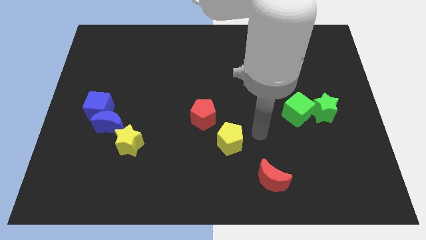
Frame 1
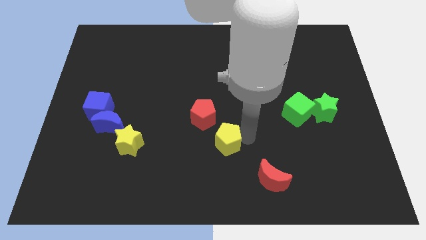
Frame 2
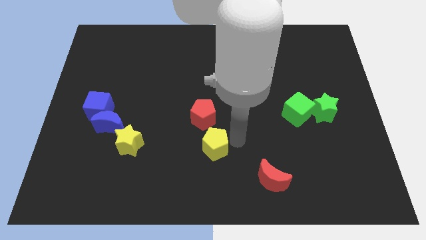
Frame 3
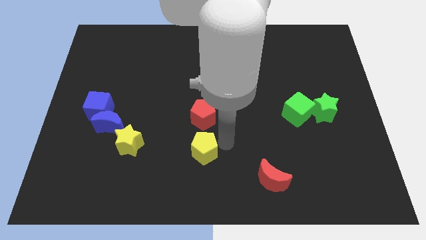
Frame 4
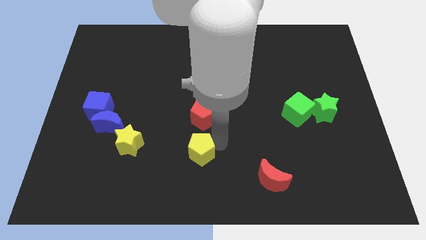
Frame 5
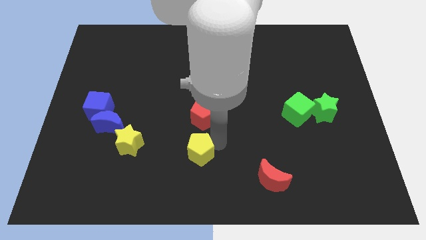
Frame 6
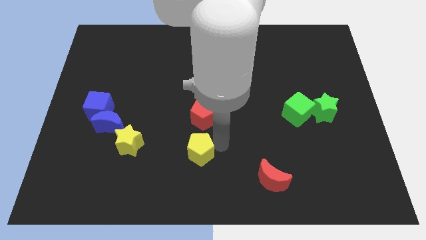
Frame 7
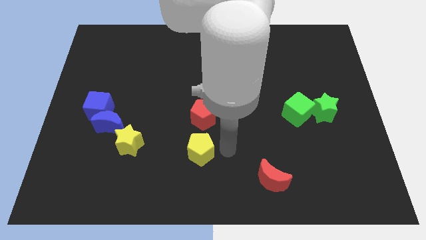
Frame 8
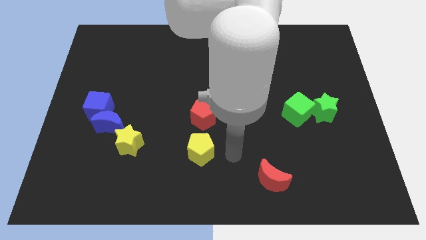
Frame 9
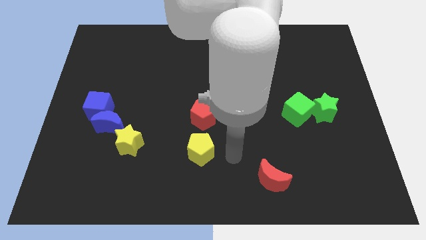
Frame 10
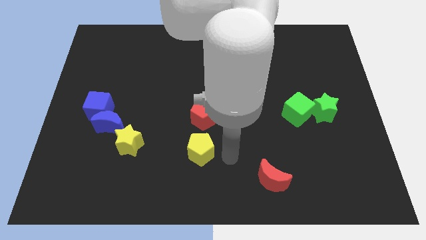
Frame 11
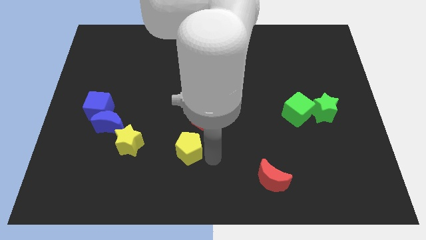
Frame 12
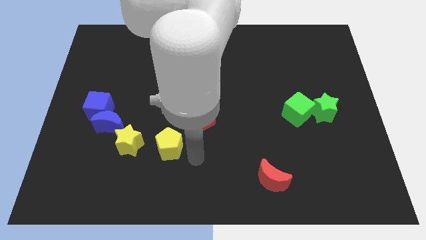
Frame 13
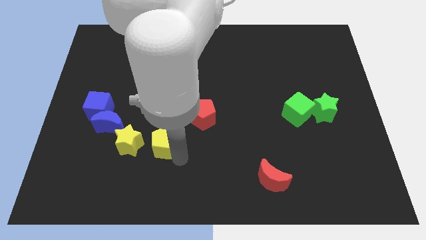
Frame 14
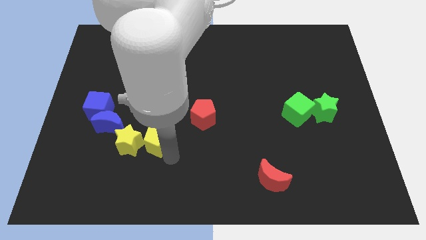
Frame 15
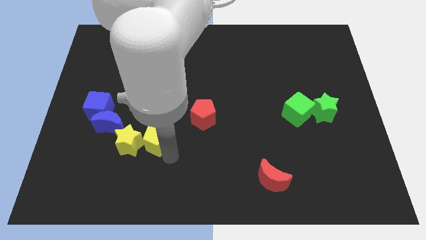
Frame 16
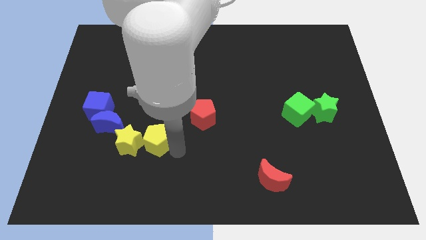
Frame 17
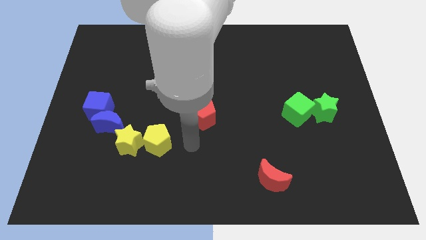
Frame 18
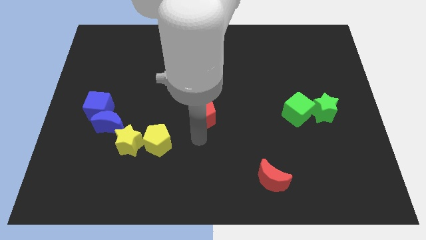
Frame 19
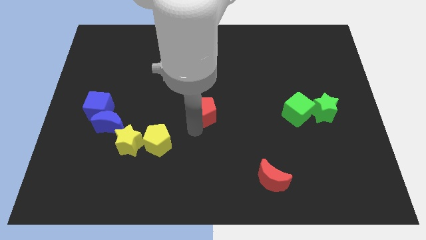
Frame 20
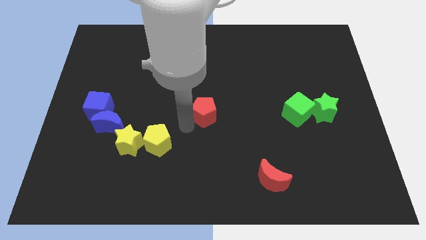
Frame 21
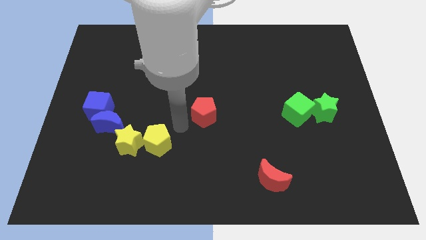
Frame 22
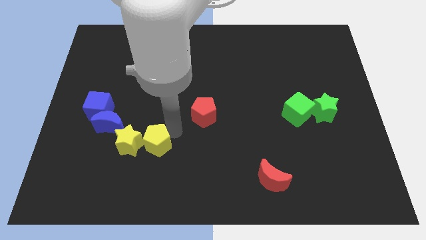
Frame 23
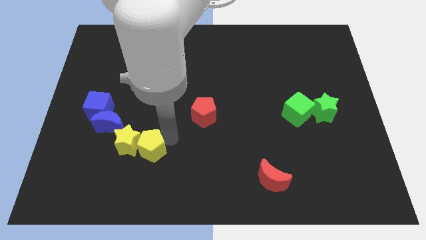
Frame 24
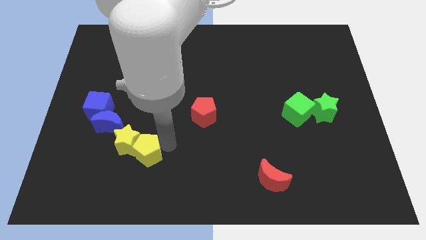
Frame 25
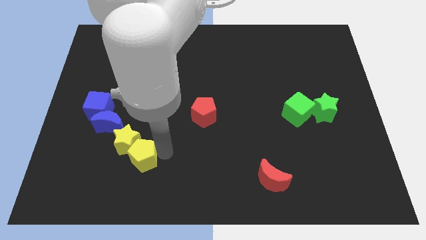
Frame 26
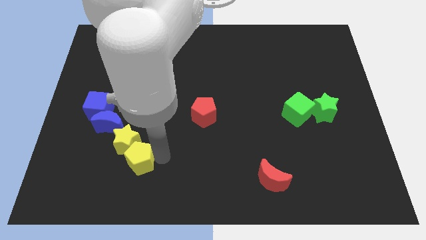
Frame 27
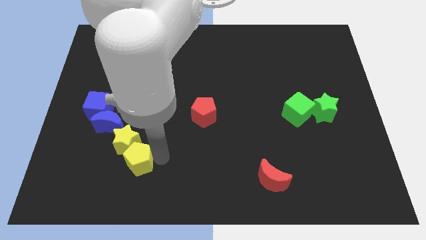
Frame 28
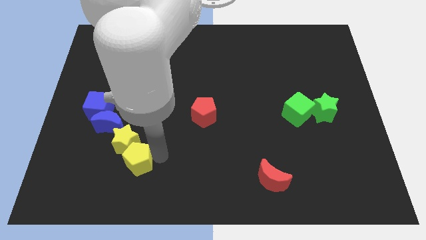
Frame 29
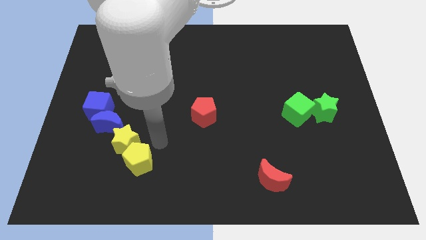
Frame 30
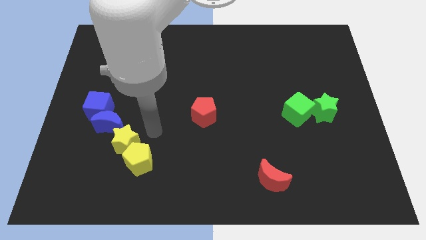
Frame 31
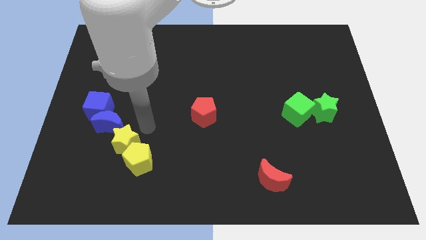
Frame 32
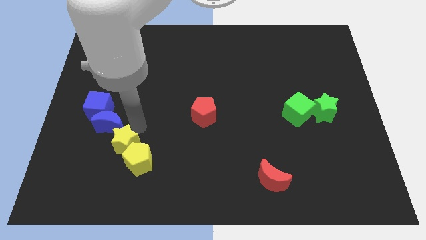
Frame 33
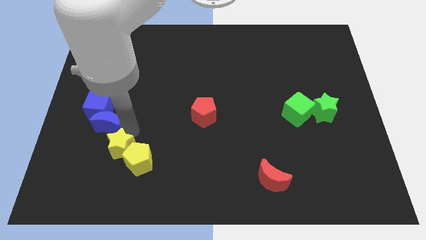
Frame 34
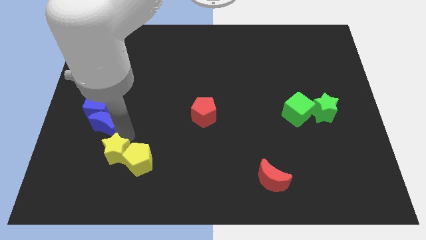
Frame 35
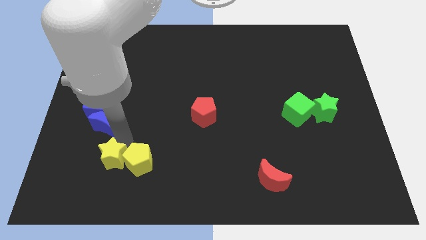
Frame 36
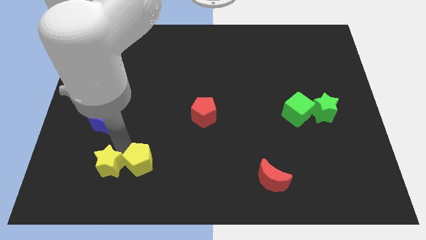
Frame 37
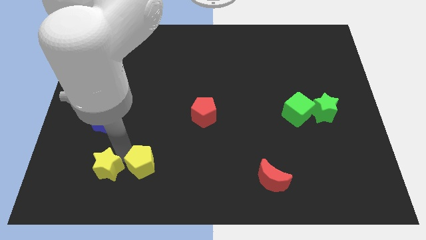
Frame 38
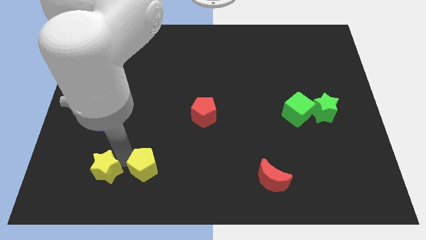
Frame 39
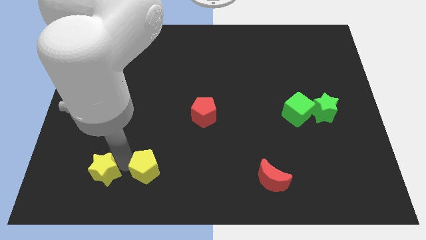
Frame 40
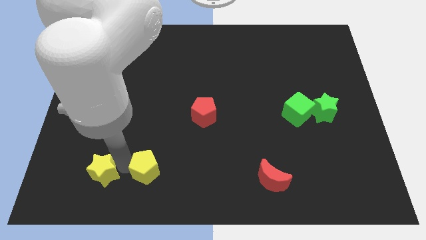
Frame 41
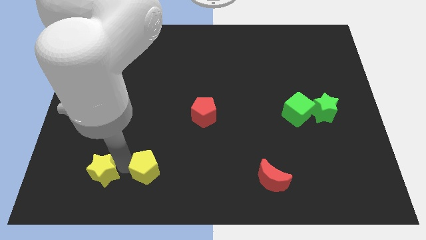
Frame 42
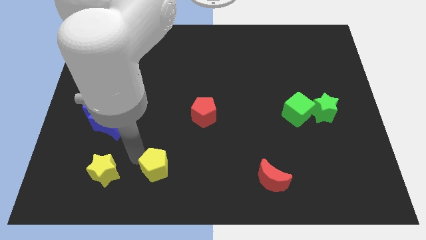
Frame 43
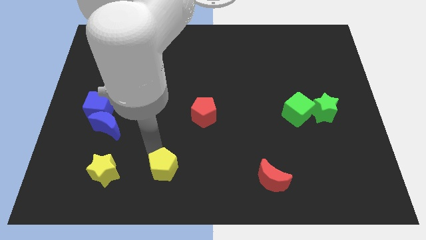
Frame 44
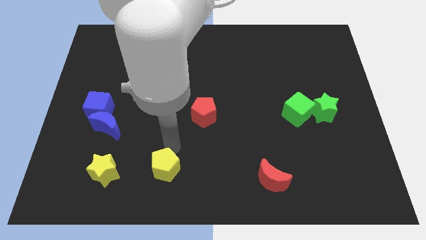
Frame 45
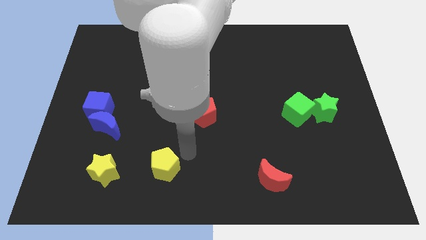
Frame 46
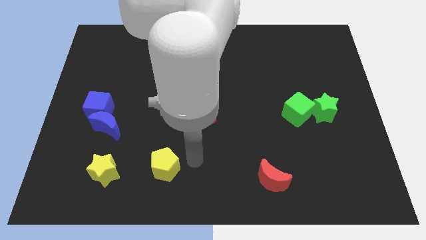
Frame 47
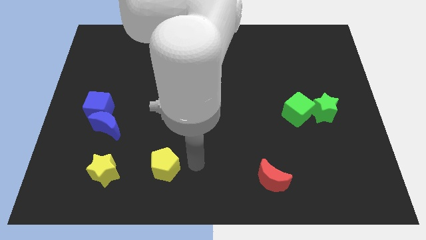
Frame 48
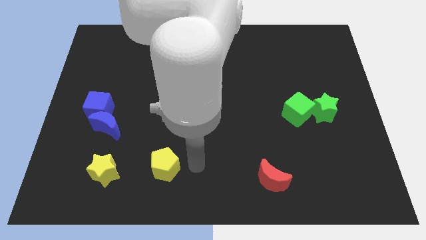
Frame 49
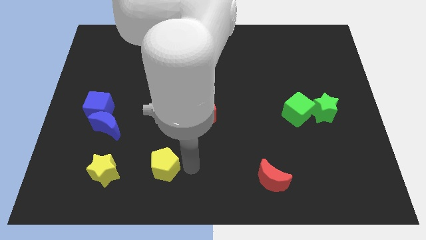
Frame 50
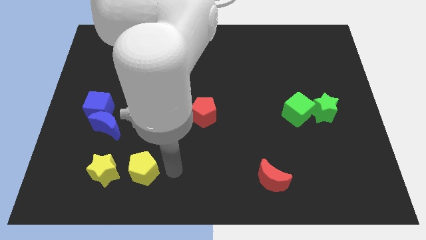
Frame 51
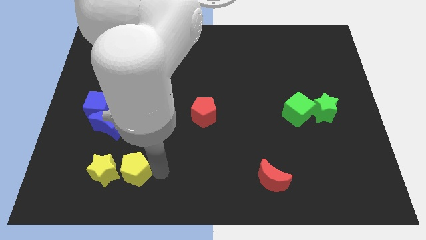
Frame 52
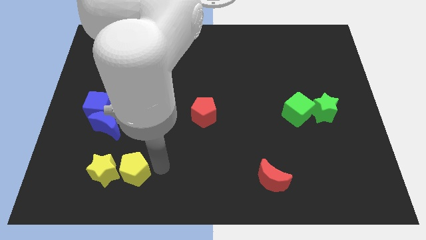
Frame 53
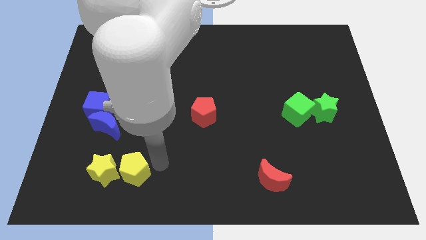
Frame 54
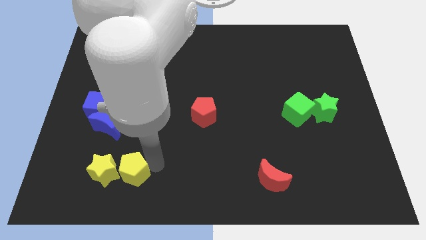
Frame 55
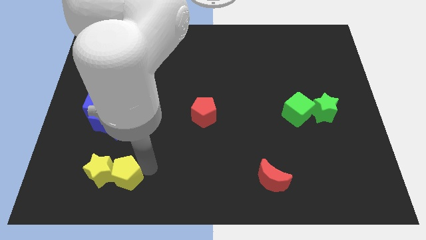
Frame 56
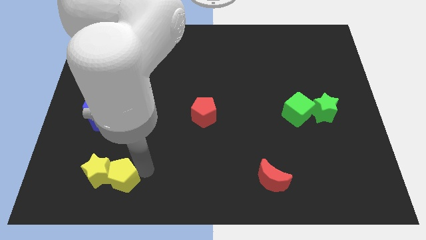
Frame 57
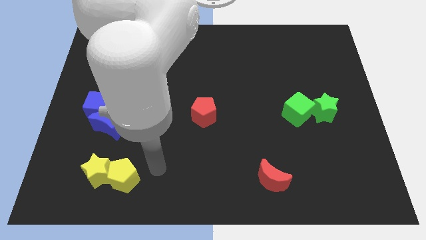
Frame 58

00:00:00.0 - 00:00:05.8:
make a pair of yellow blocks below the blue blocks

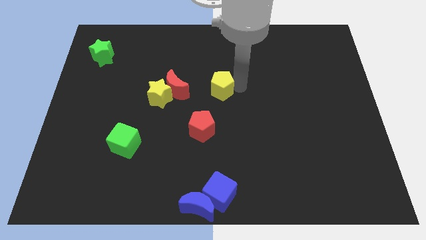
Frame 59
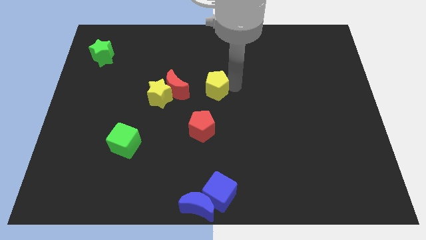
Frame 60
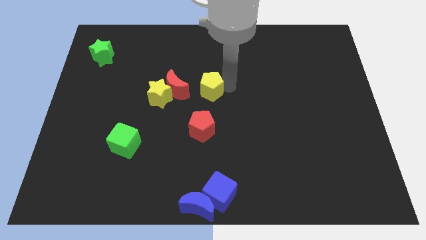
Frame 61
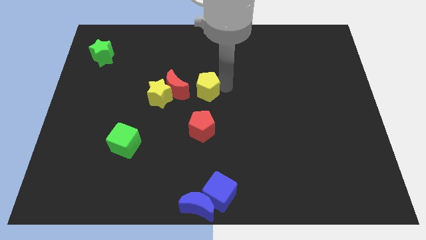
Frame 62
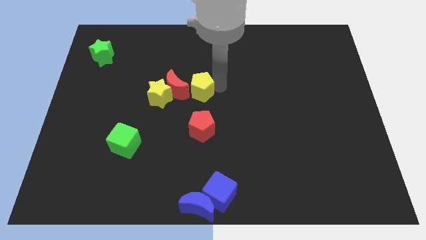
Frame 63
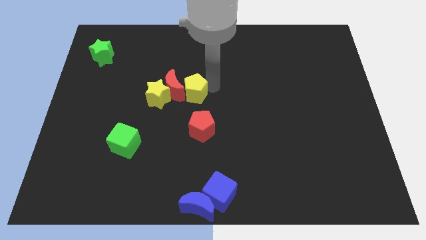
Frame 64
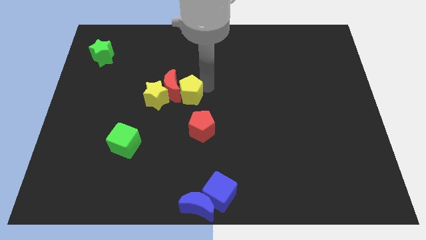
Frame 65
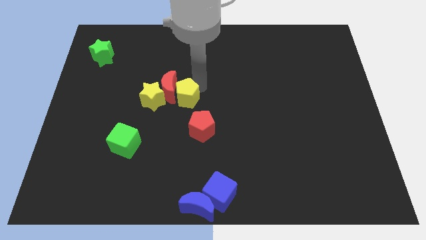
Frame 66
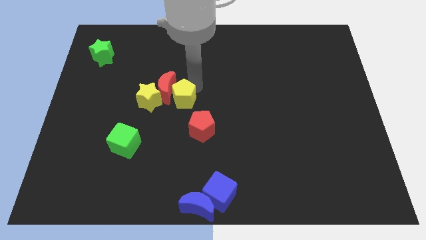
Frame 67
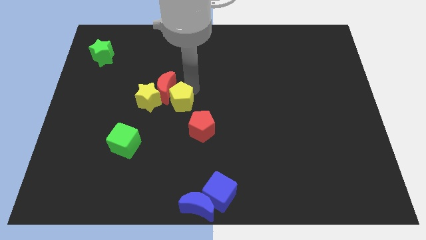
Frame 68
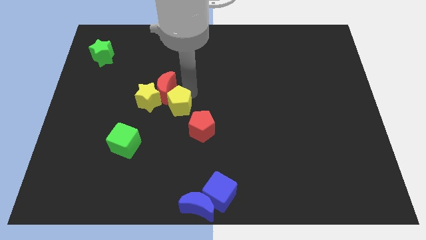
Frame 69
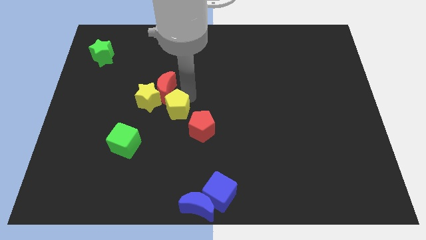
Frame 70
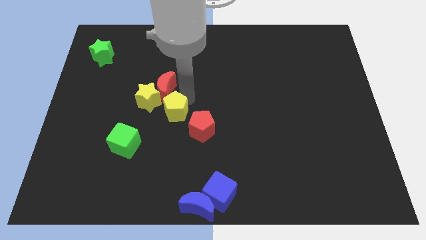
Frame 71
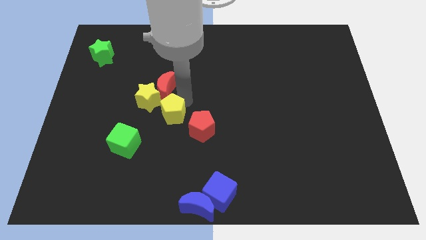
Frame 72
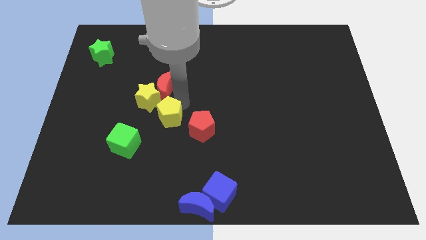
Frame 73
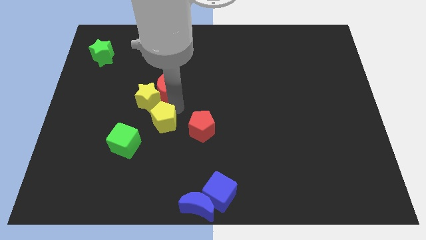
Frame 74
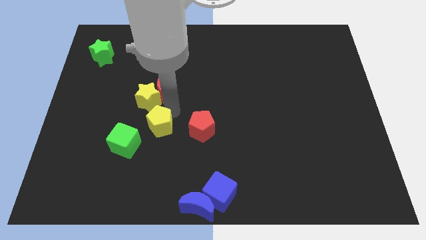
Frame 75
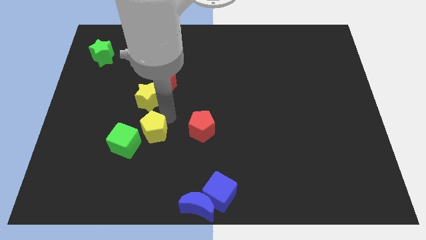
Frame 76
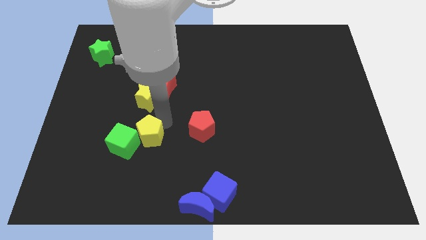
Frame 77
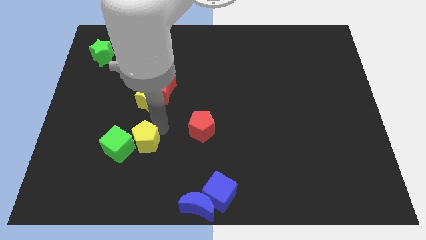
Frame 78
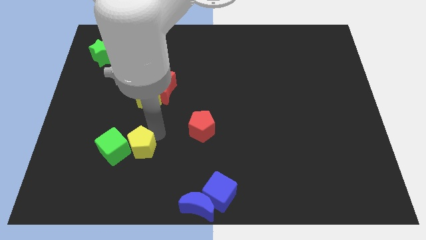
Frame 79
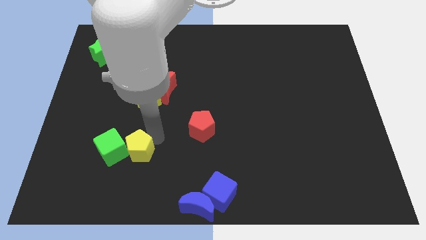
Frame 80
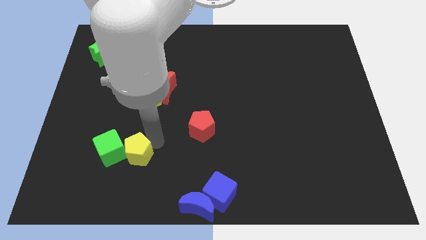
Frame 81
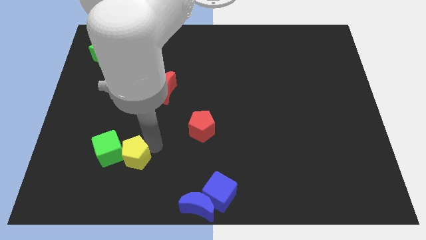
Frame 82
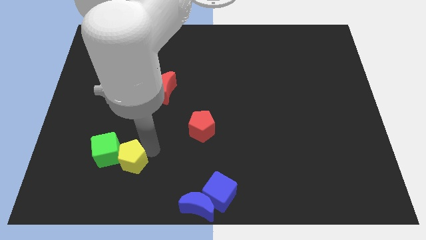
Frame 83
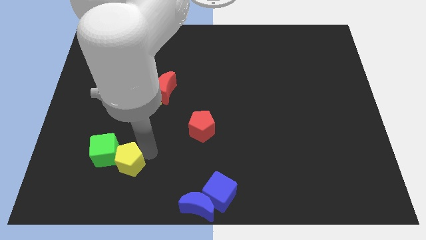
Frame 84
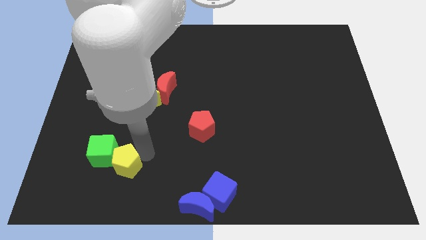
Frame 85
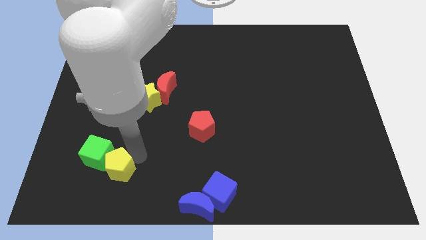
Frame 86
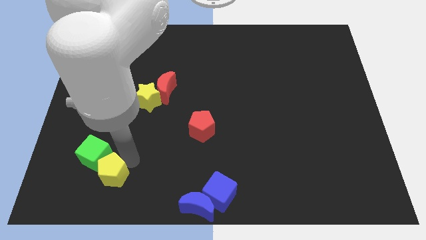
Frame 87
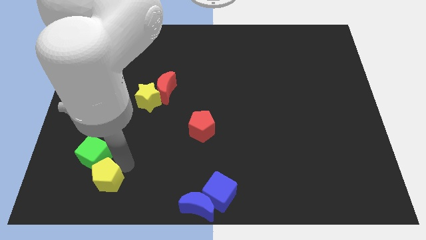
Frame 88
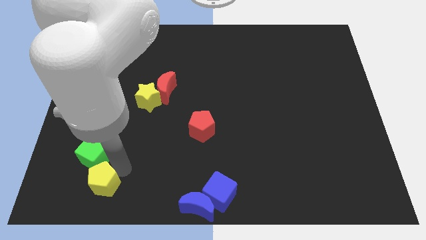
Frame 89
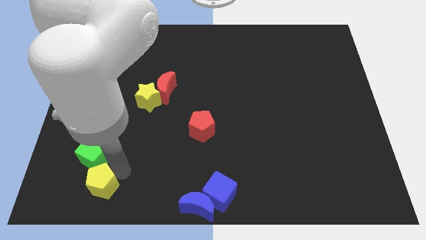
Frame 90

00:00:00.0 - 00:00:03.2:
push the yellow pentagon and green cube towards the bottom left corner of the board
